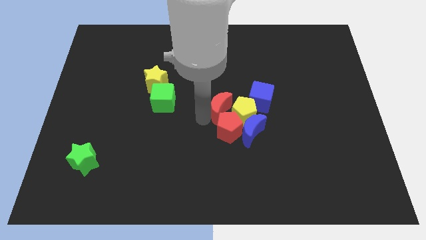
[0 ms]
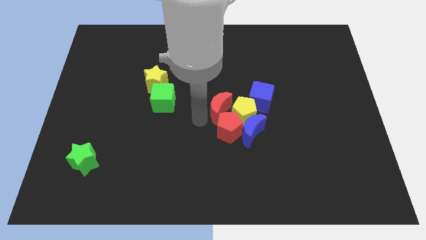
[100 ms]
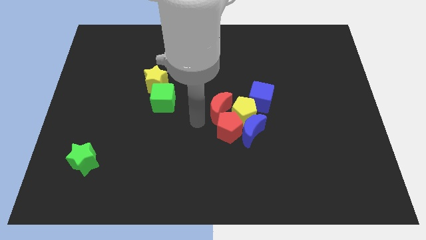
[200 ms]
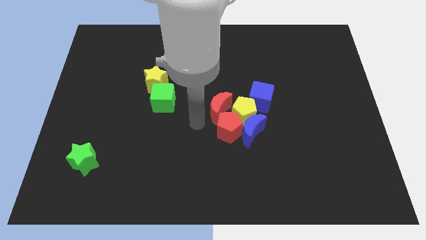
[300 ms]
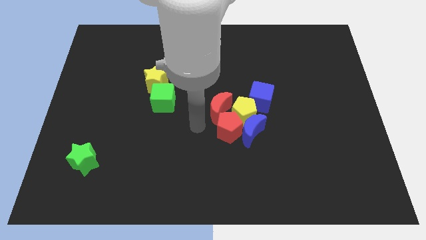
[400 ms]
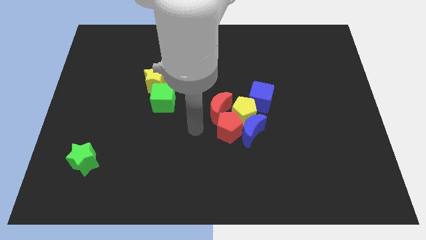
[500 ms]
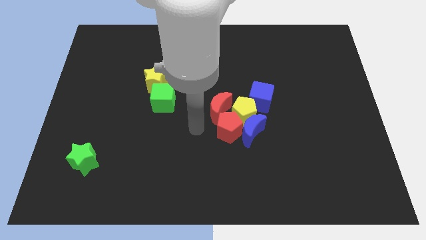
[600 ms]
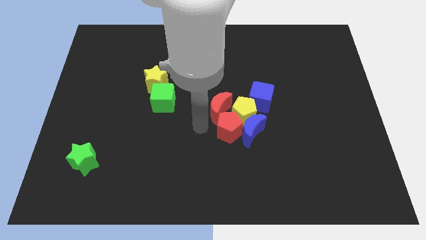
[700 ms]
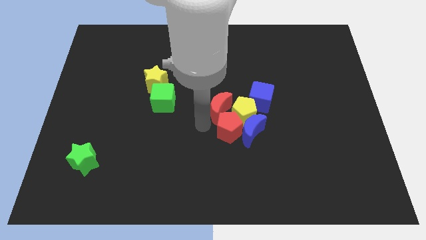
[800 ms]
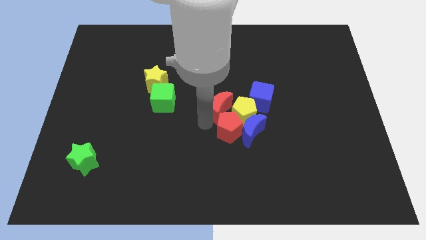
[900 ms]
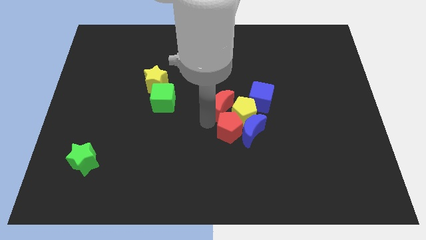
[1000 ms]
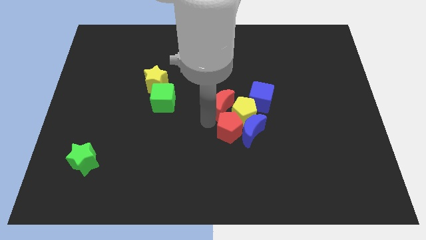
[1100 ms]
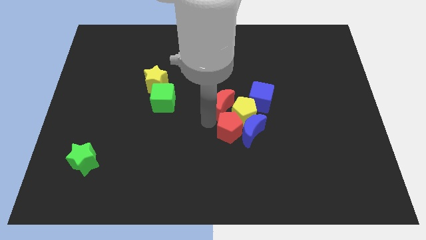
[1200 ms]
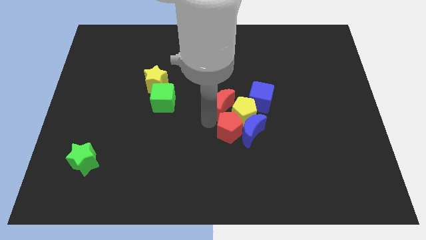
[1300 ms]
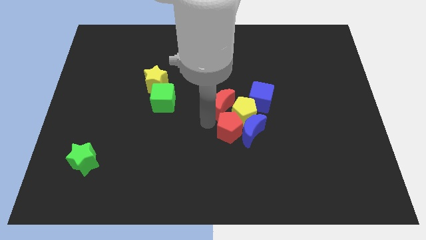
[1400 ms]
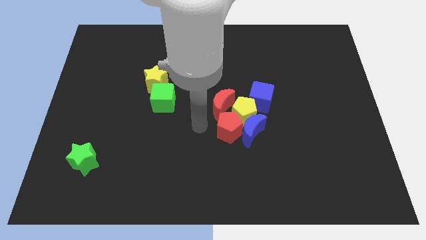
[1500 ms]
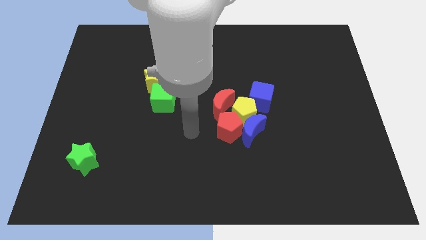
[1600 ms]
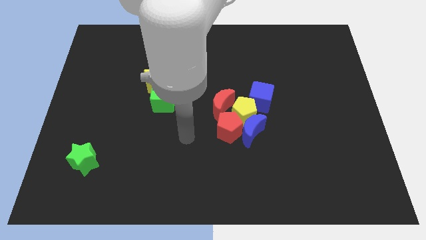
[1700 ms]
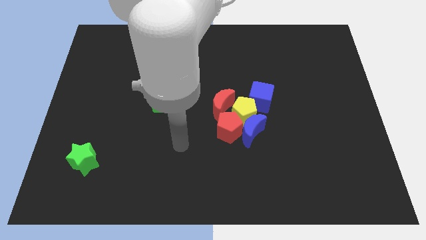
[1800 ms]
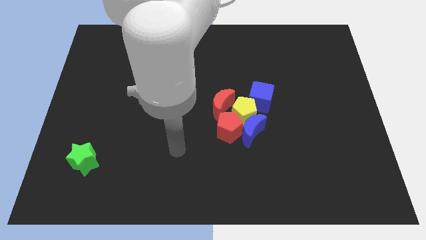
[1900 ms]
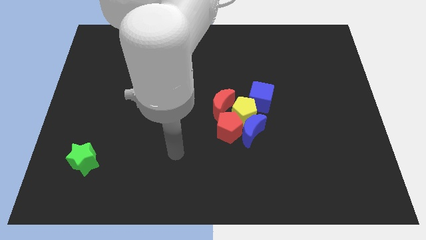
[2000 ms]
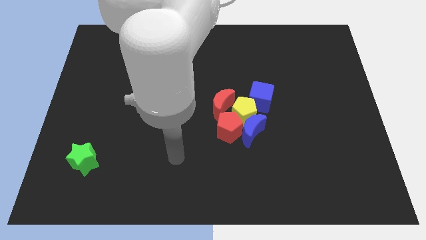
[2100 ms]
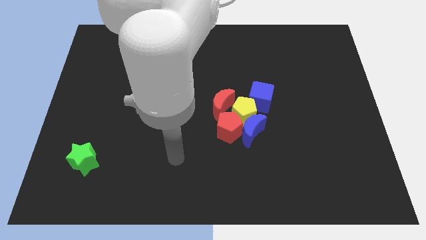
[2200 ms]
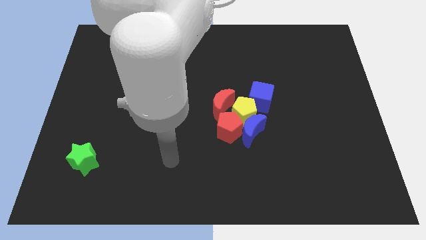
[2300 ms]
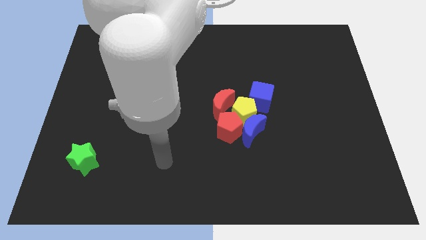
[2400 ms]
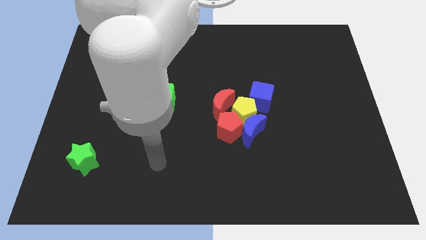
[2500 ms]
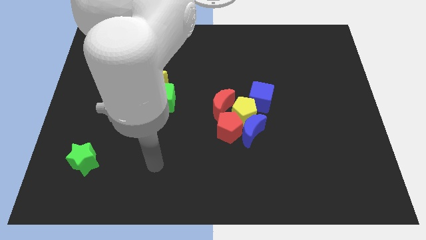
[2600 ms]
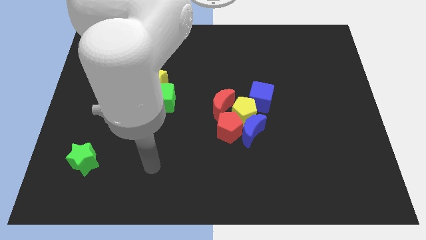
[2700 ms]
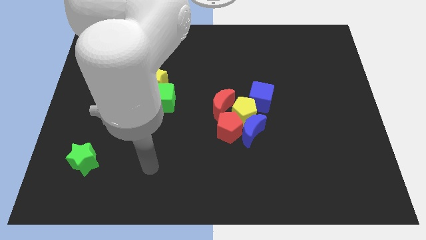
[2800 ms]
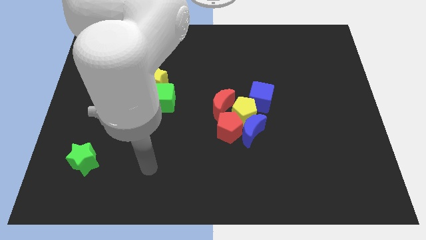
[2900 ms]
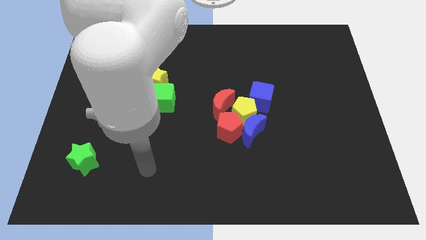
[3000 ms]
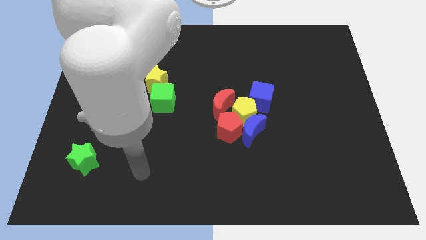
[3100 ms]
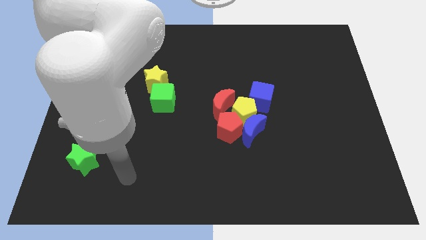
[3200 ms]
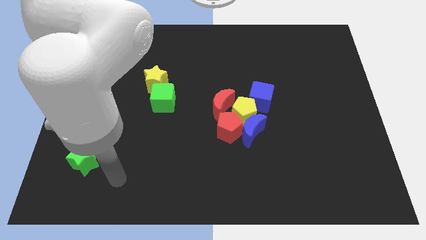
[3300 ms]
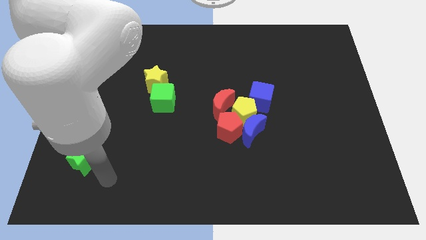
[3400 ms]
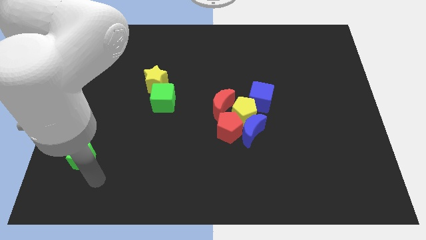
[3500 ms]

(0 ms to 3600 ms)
move your arm away from the red crescent

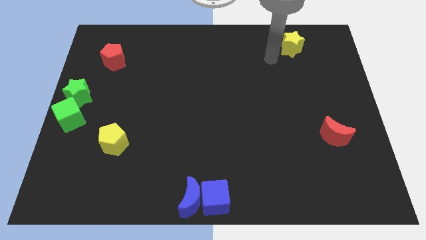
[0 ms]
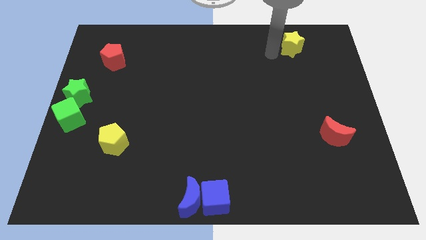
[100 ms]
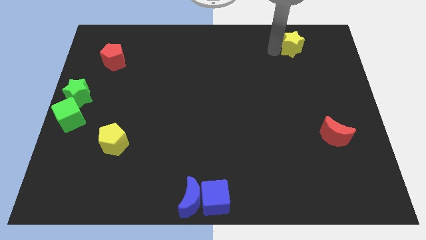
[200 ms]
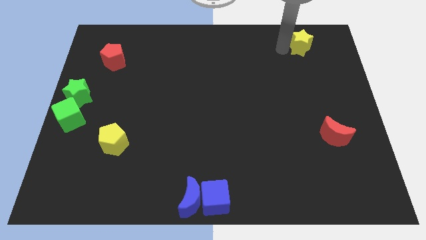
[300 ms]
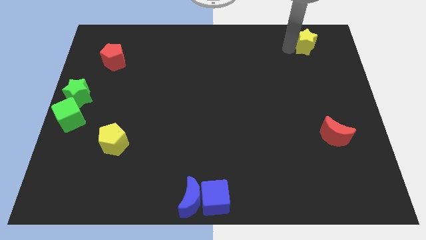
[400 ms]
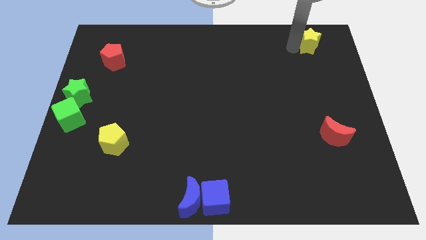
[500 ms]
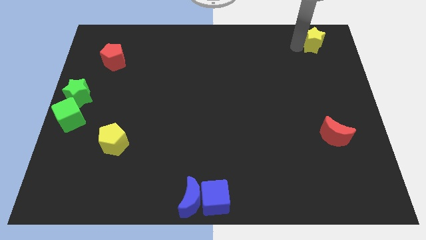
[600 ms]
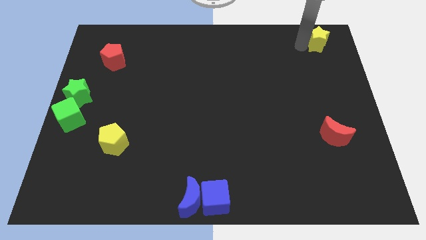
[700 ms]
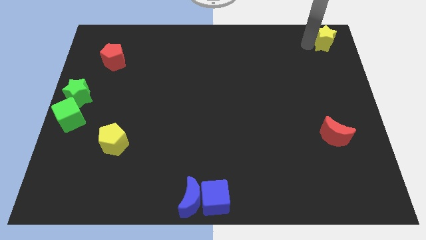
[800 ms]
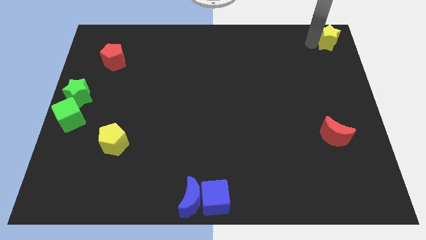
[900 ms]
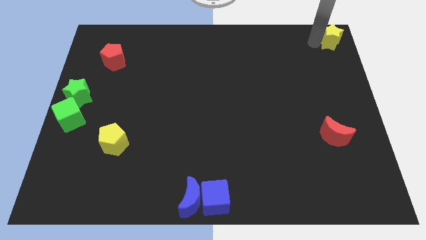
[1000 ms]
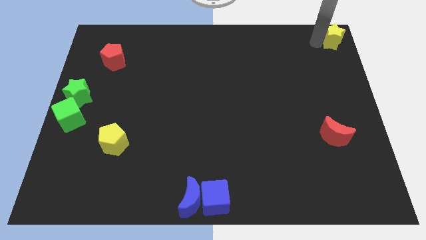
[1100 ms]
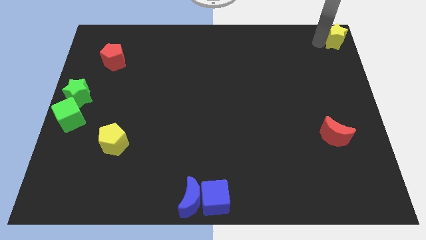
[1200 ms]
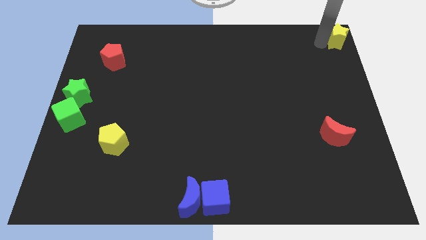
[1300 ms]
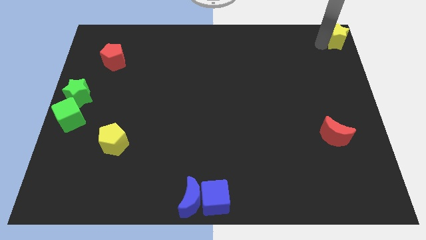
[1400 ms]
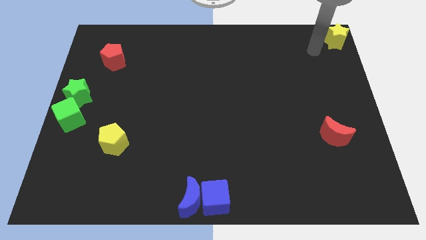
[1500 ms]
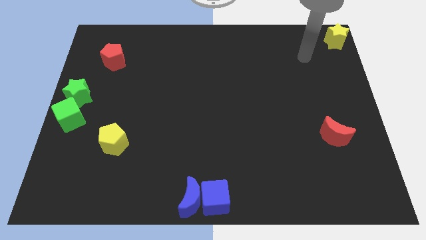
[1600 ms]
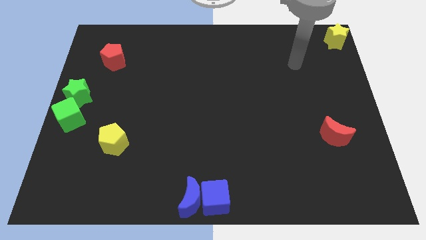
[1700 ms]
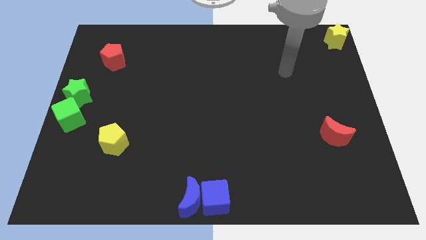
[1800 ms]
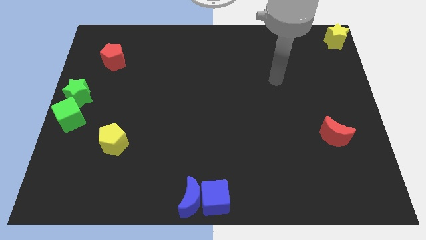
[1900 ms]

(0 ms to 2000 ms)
slide the yellow star to the top right corner of the board

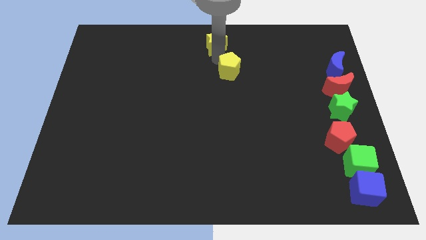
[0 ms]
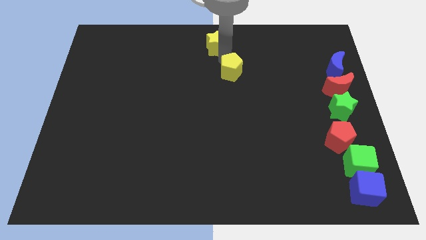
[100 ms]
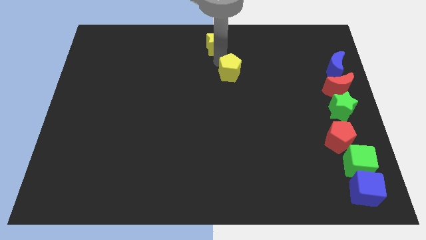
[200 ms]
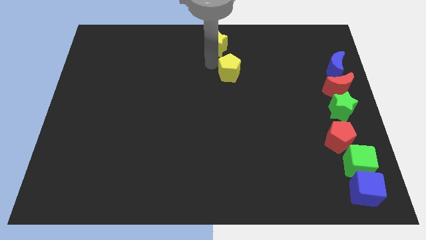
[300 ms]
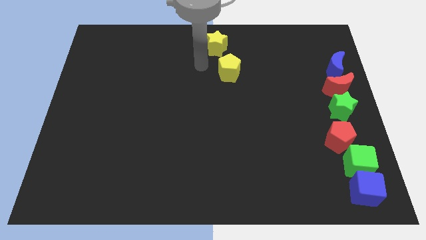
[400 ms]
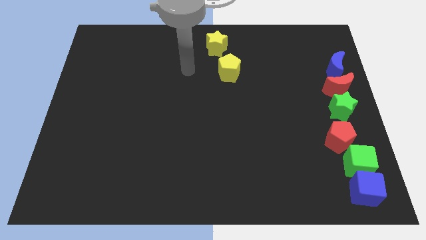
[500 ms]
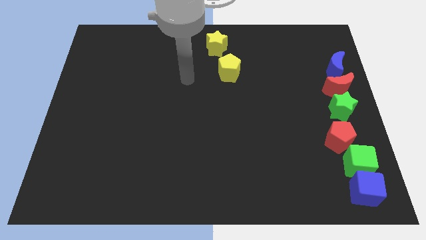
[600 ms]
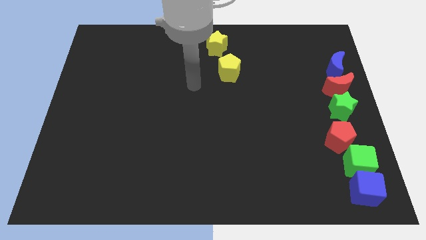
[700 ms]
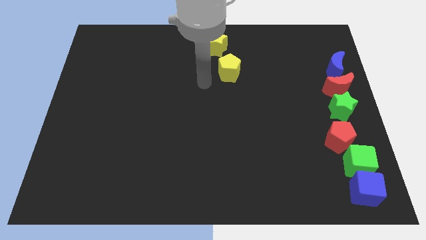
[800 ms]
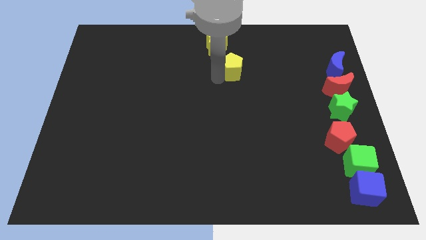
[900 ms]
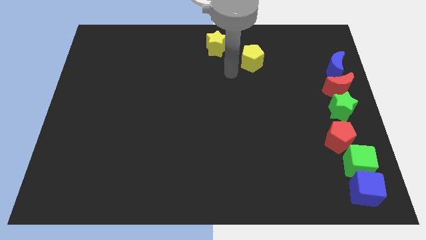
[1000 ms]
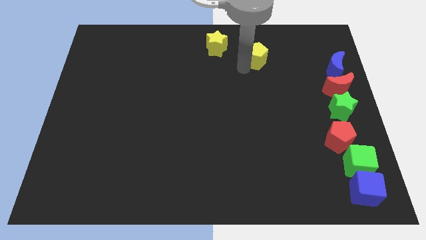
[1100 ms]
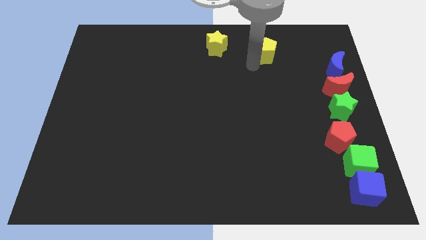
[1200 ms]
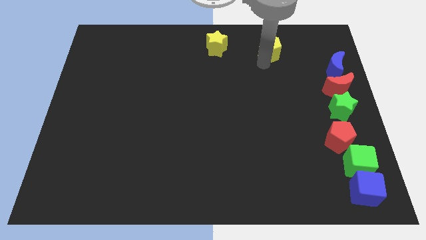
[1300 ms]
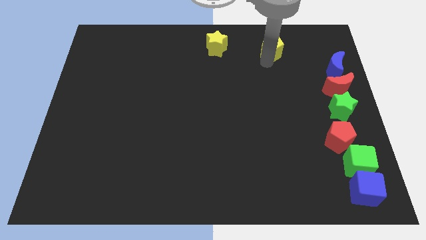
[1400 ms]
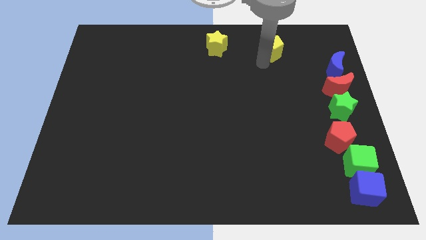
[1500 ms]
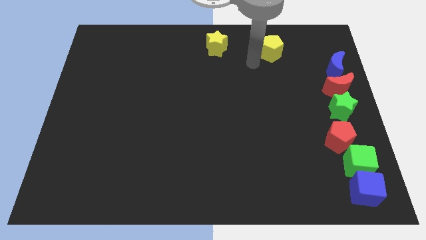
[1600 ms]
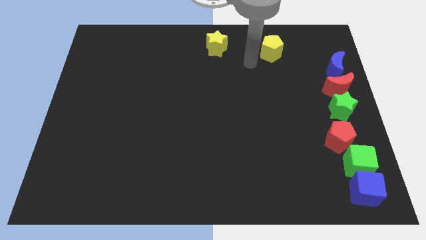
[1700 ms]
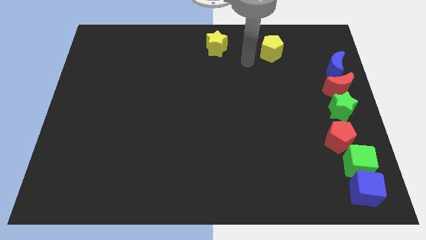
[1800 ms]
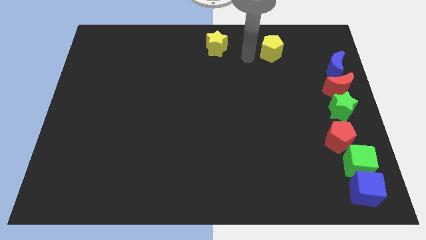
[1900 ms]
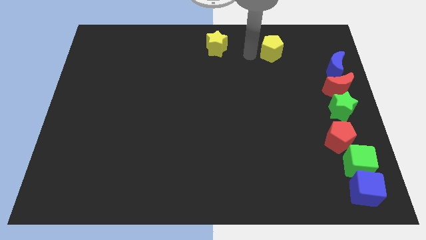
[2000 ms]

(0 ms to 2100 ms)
place the yellow pentagon to the right of the yellow star

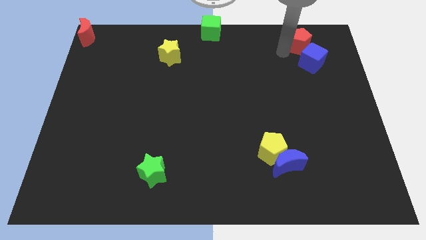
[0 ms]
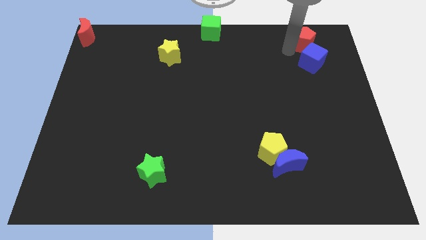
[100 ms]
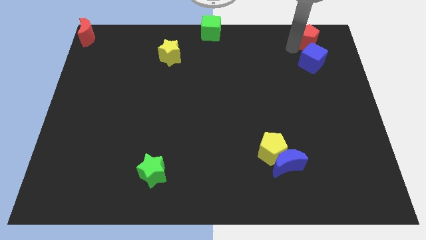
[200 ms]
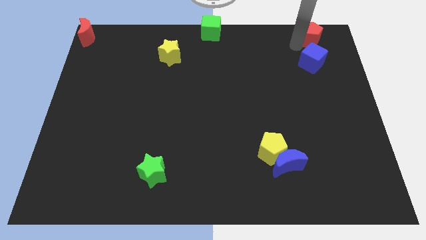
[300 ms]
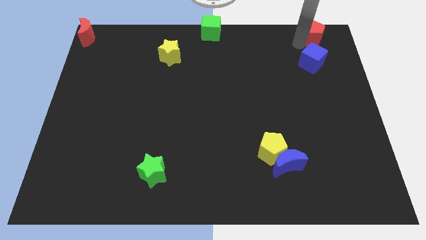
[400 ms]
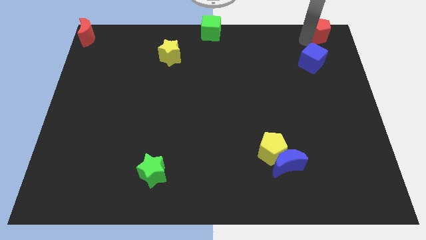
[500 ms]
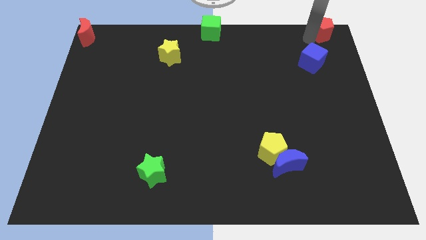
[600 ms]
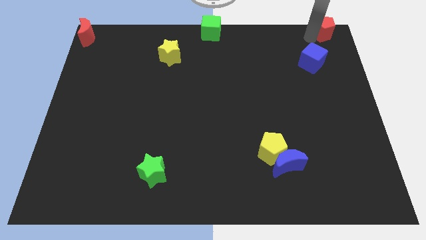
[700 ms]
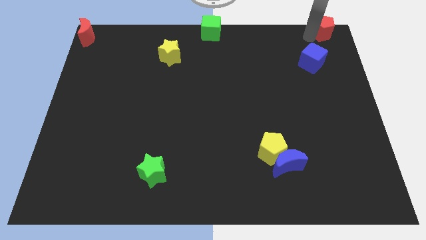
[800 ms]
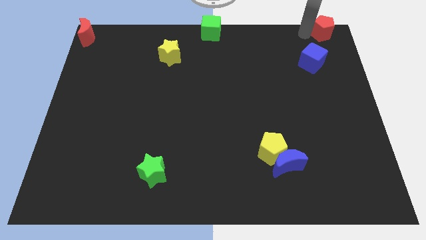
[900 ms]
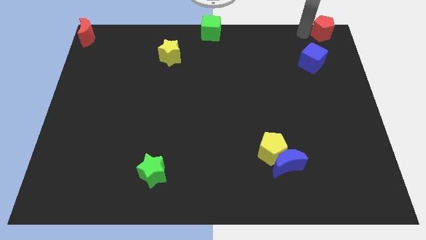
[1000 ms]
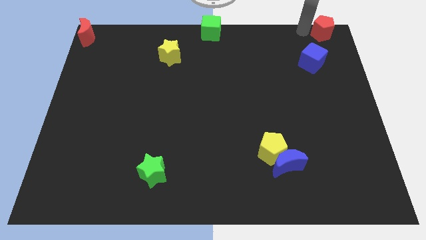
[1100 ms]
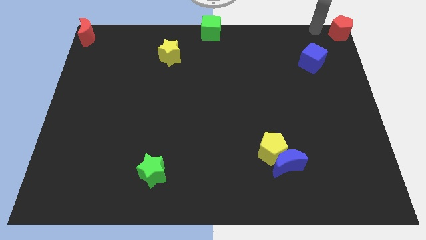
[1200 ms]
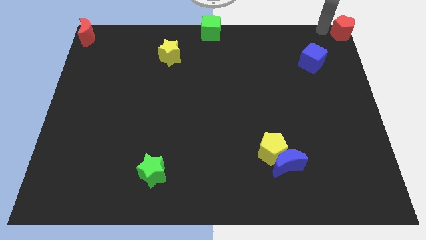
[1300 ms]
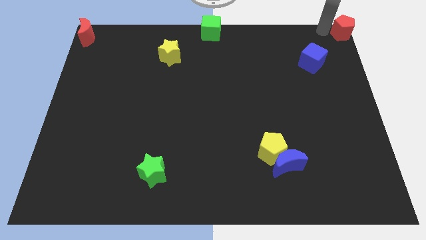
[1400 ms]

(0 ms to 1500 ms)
place red pentagon towards top right corner
